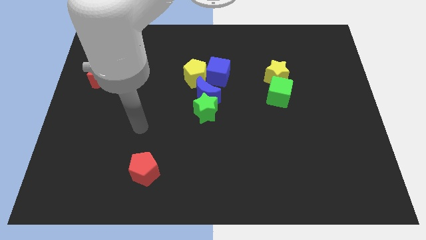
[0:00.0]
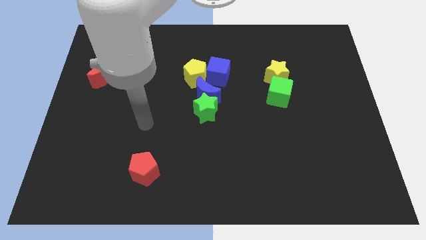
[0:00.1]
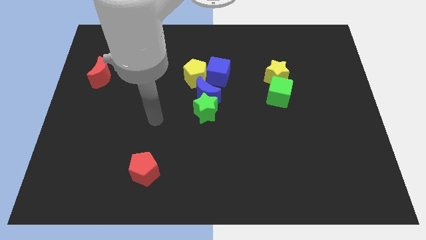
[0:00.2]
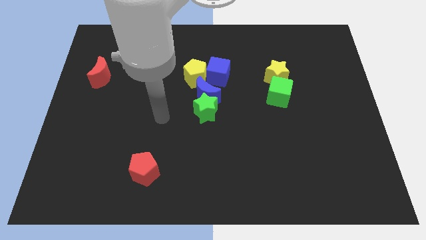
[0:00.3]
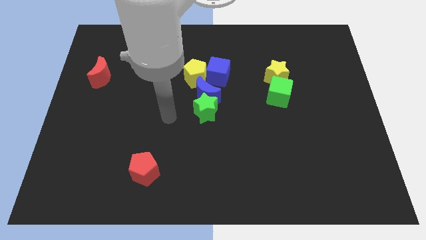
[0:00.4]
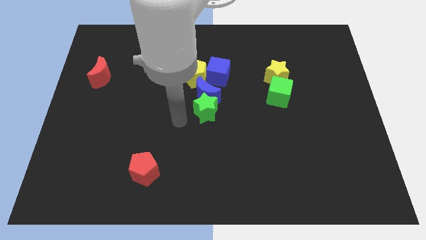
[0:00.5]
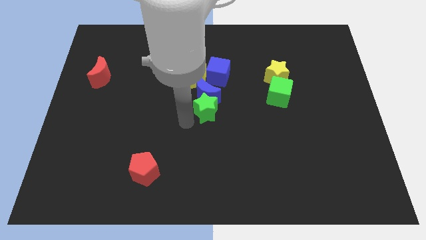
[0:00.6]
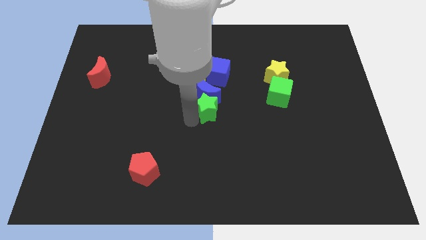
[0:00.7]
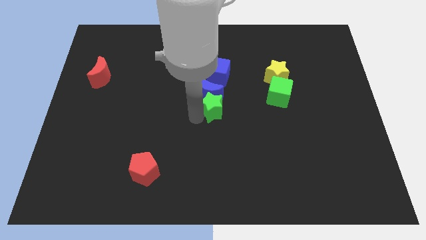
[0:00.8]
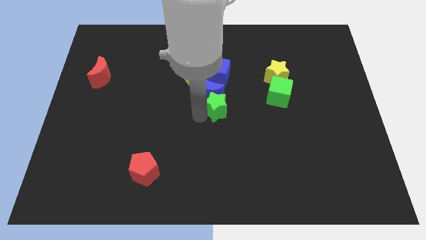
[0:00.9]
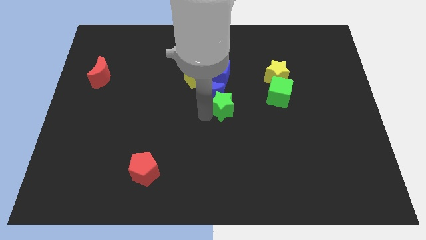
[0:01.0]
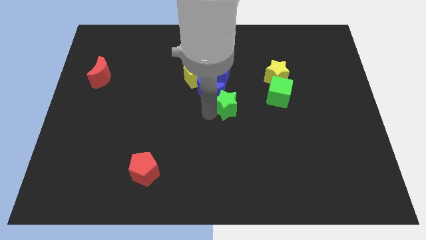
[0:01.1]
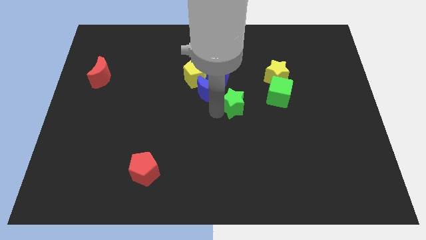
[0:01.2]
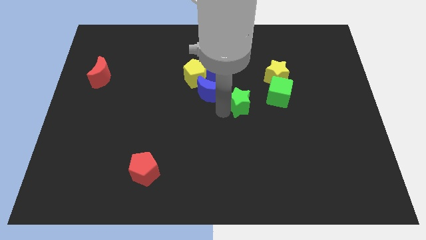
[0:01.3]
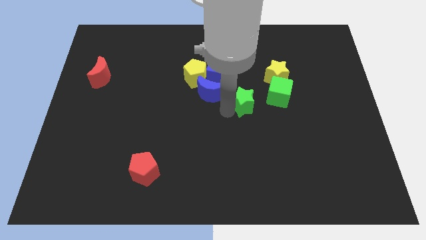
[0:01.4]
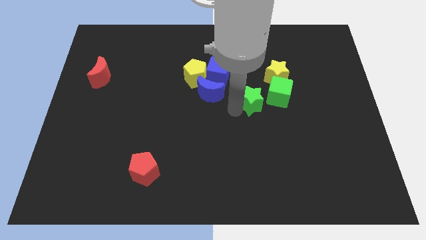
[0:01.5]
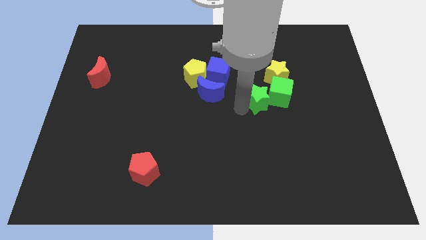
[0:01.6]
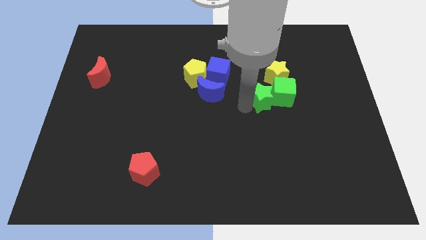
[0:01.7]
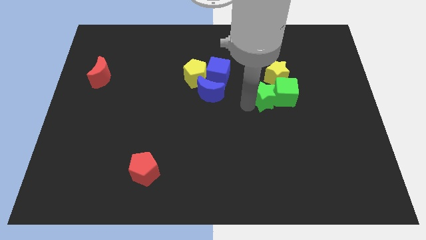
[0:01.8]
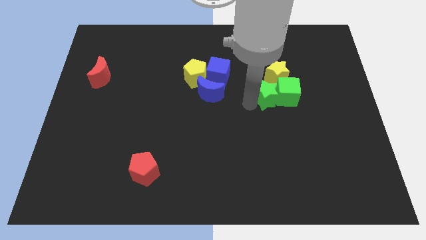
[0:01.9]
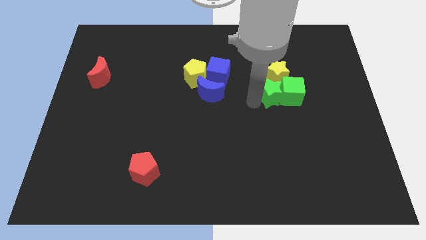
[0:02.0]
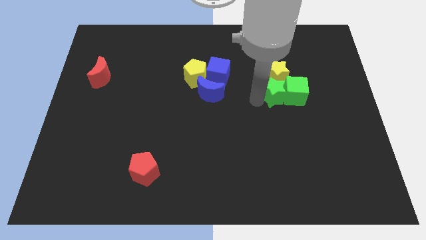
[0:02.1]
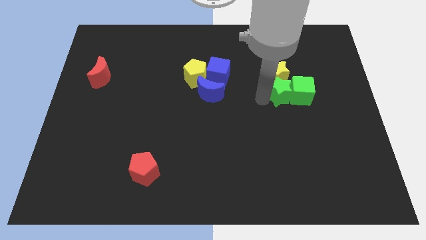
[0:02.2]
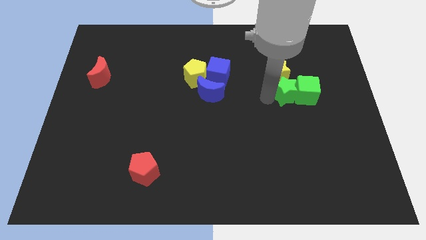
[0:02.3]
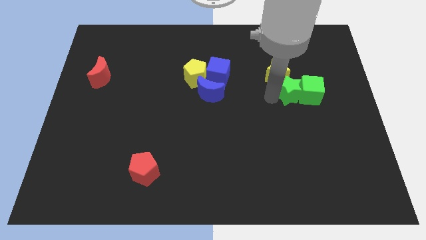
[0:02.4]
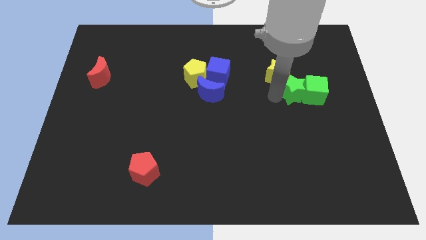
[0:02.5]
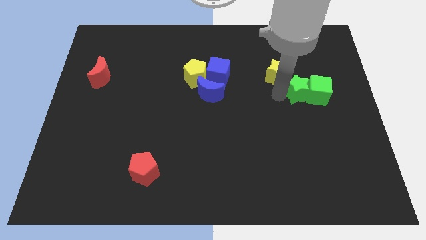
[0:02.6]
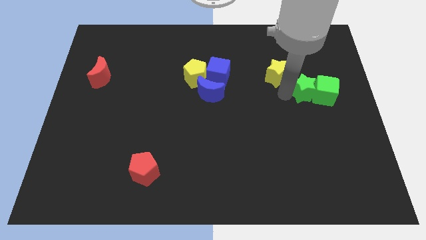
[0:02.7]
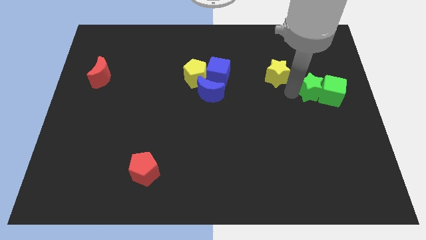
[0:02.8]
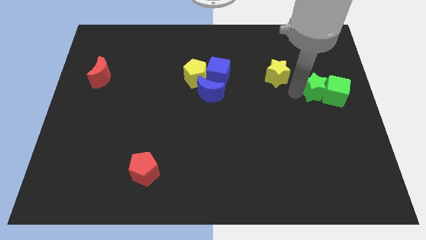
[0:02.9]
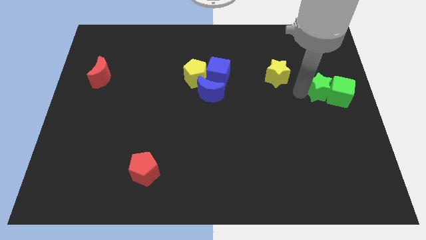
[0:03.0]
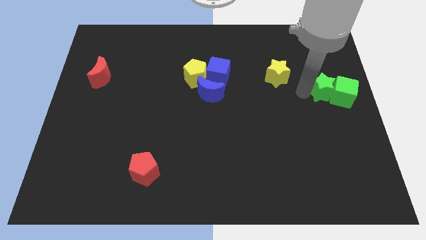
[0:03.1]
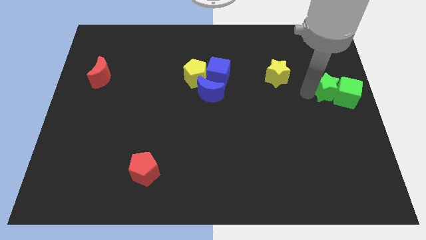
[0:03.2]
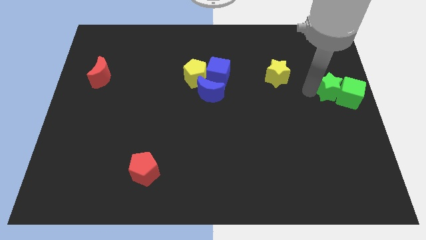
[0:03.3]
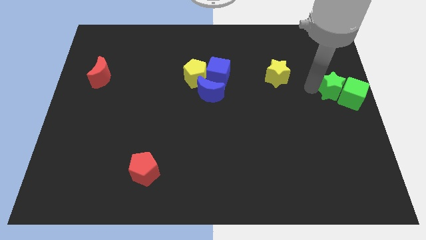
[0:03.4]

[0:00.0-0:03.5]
adjust the green cube and green star at the right center of the board

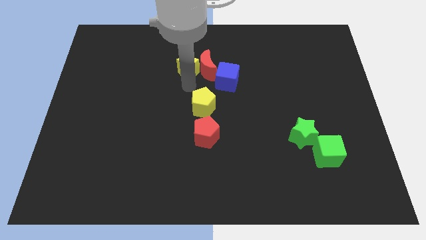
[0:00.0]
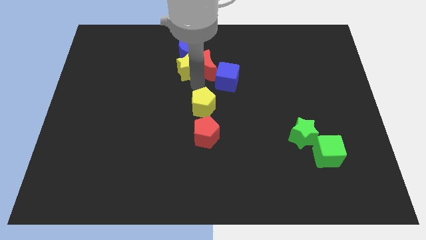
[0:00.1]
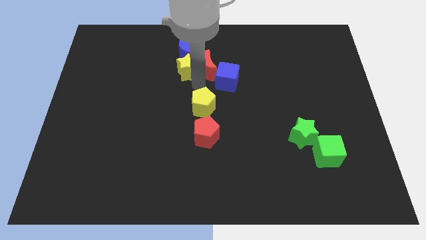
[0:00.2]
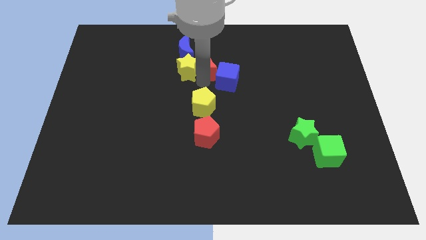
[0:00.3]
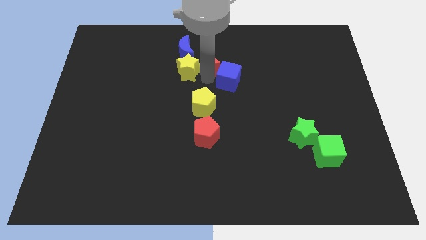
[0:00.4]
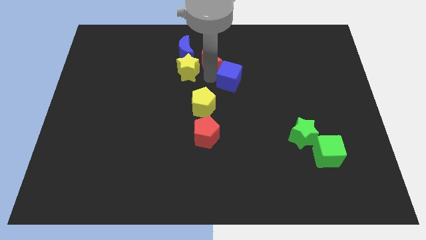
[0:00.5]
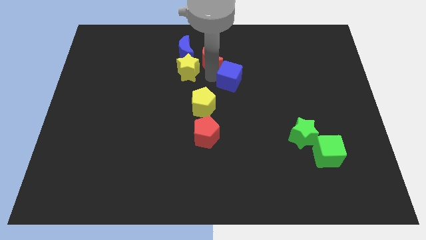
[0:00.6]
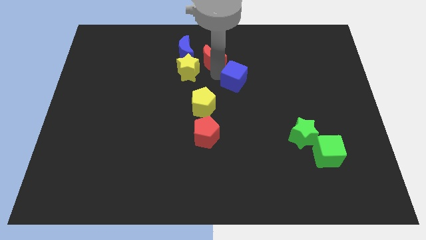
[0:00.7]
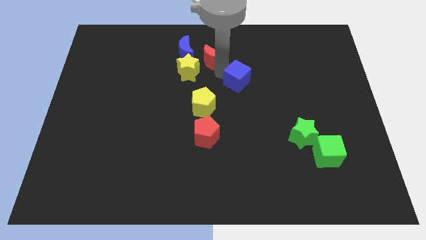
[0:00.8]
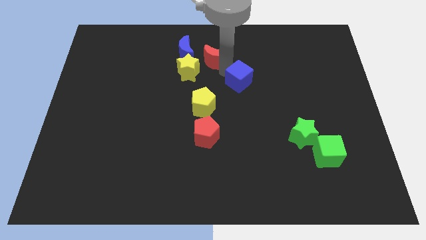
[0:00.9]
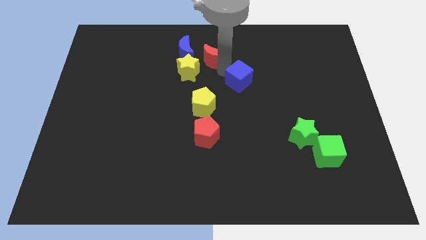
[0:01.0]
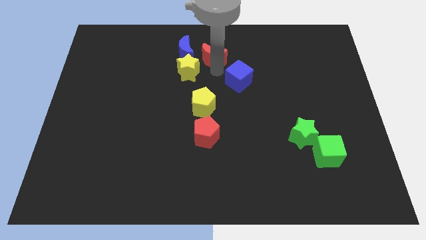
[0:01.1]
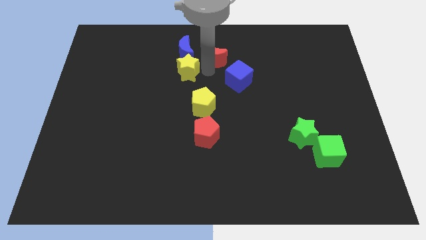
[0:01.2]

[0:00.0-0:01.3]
separate the blue cube and the red crescent

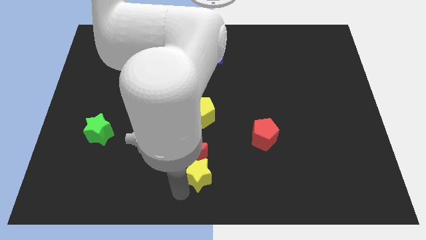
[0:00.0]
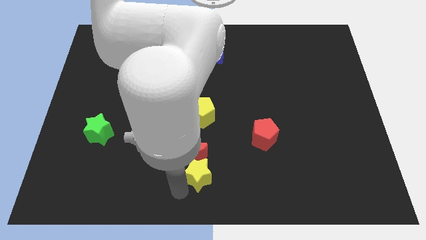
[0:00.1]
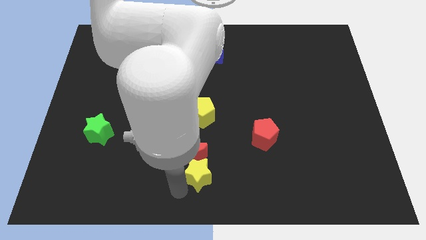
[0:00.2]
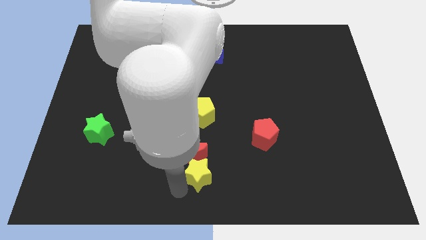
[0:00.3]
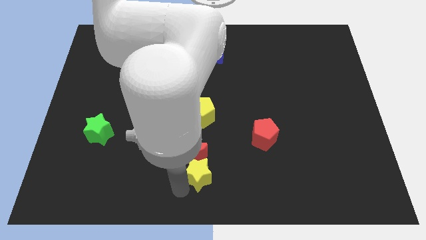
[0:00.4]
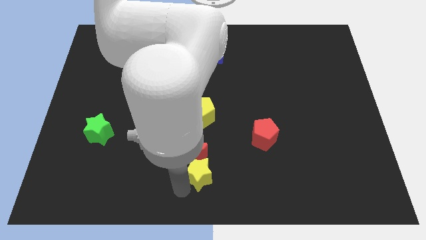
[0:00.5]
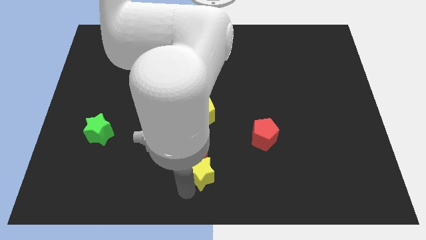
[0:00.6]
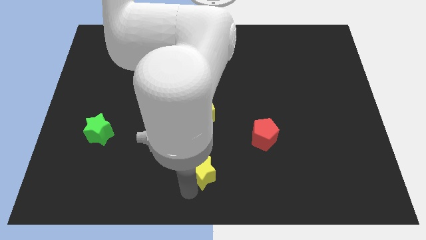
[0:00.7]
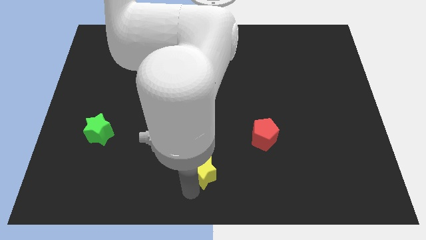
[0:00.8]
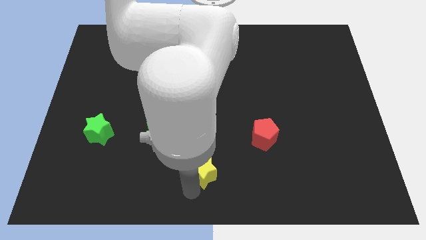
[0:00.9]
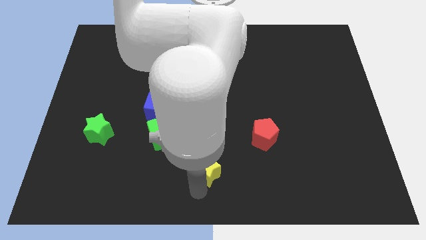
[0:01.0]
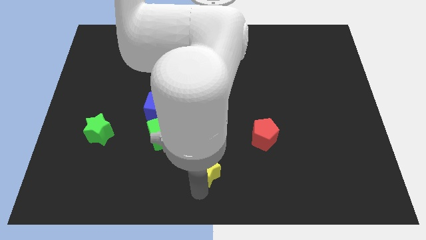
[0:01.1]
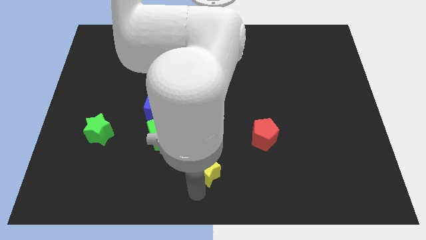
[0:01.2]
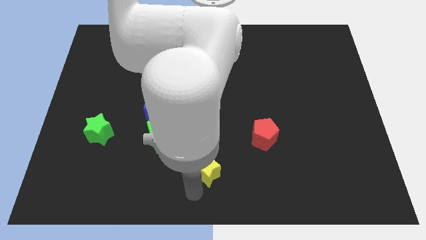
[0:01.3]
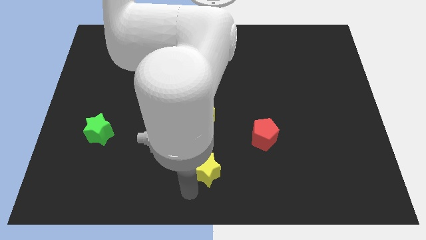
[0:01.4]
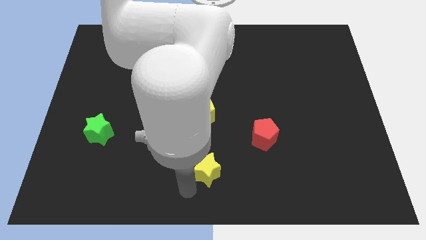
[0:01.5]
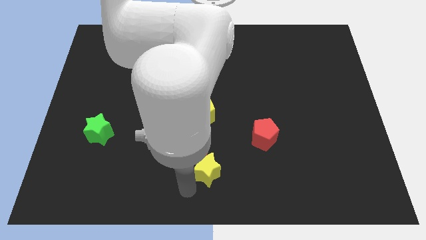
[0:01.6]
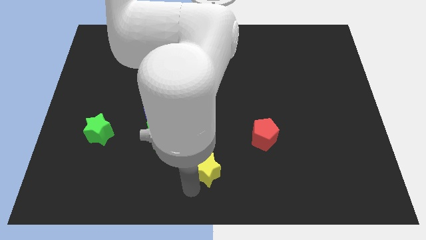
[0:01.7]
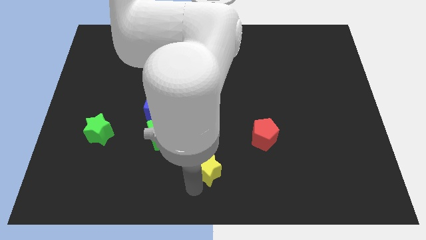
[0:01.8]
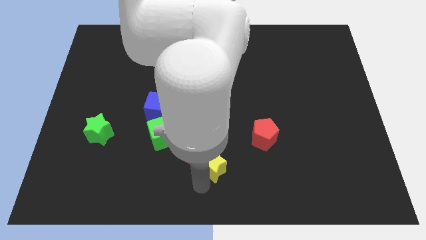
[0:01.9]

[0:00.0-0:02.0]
drag the yellow star towards the red pentagon

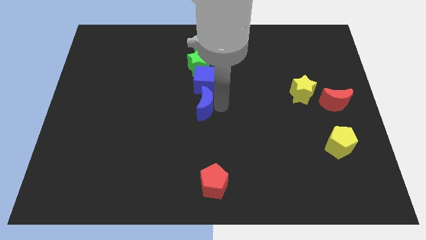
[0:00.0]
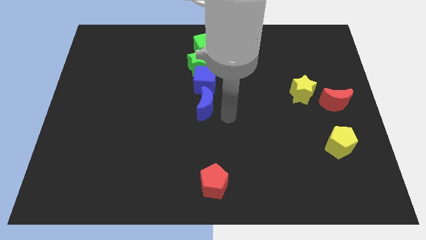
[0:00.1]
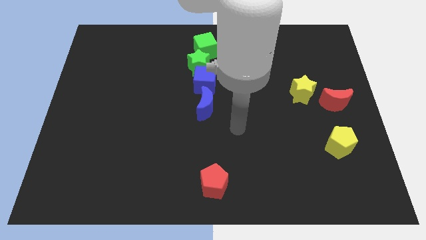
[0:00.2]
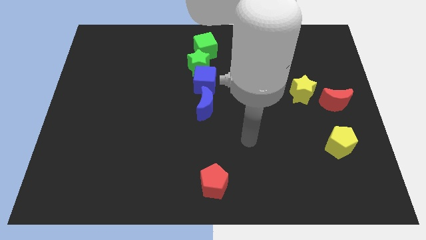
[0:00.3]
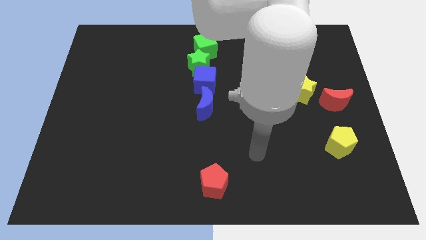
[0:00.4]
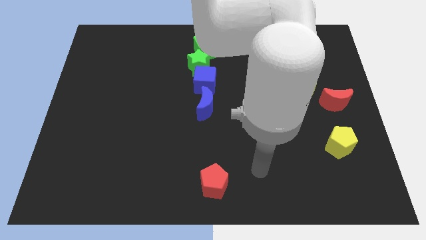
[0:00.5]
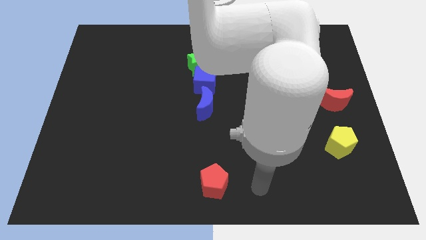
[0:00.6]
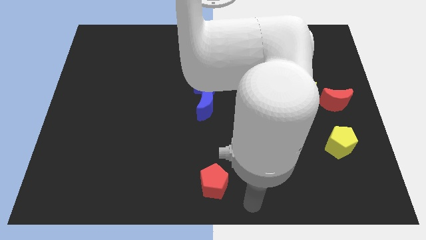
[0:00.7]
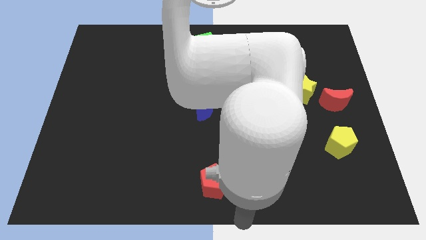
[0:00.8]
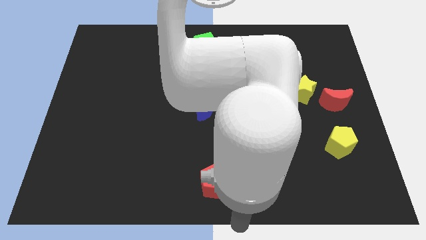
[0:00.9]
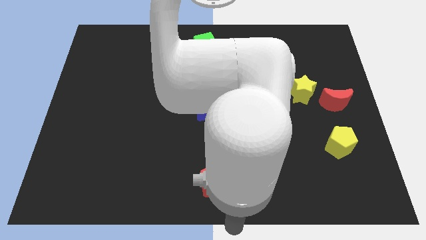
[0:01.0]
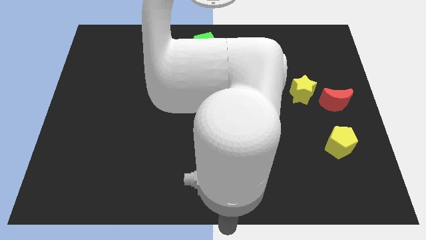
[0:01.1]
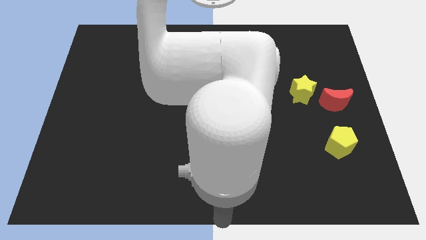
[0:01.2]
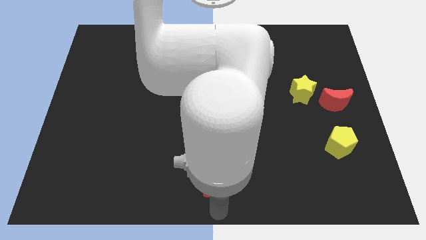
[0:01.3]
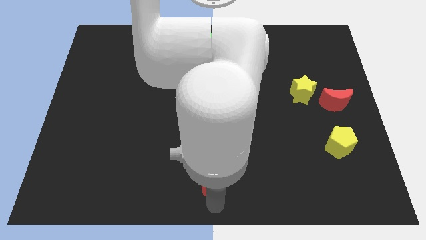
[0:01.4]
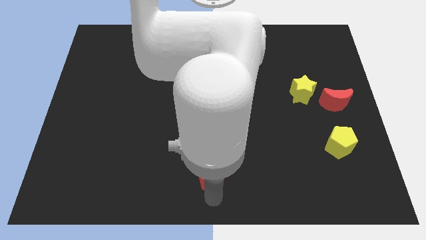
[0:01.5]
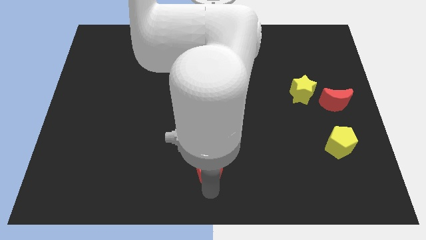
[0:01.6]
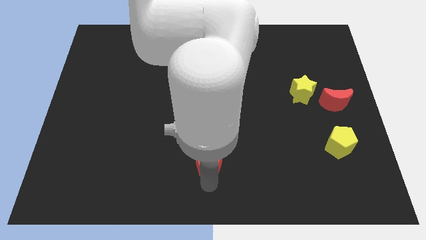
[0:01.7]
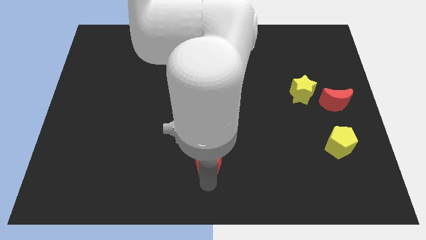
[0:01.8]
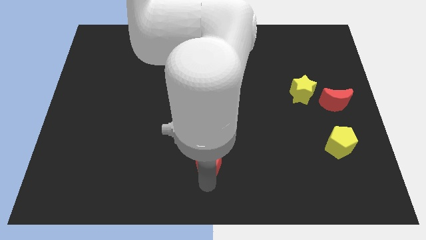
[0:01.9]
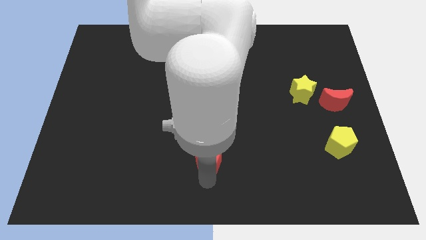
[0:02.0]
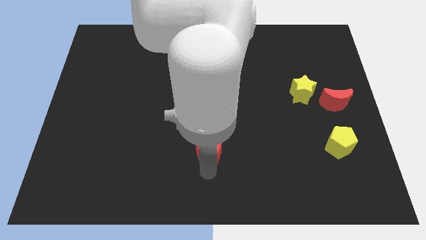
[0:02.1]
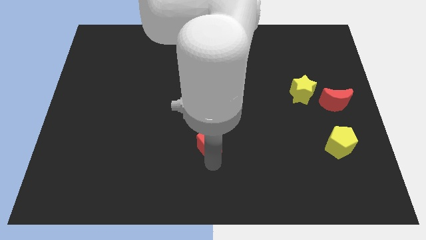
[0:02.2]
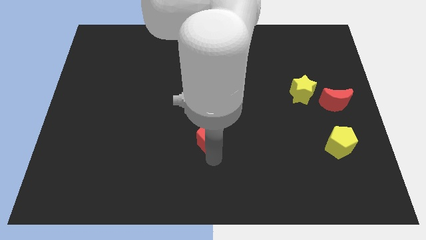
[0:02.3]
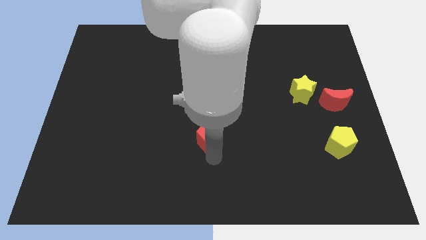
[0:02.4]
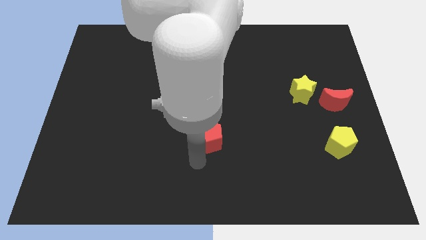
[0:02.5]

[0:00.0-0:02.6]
drag the red pentagon to the bottom side of the blue moon
